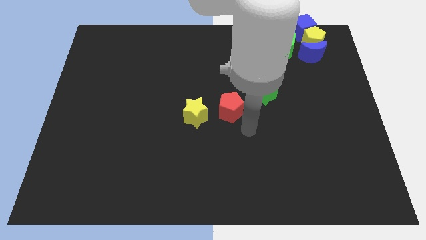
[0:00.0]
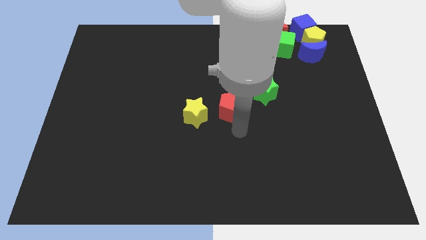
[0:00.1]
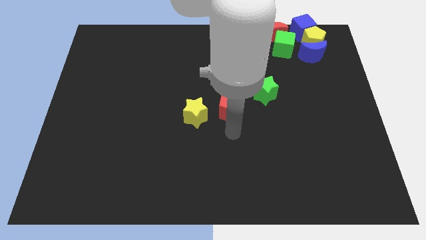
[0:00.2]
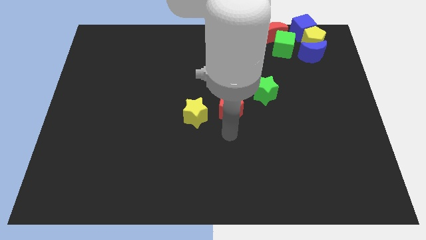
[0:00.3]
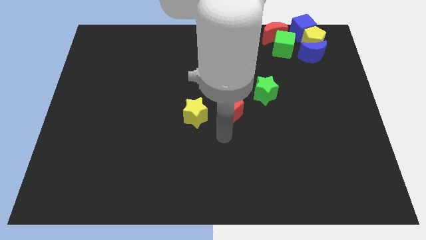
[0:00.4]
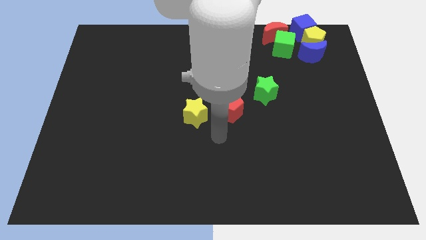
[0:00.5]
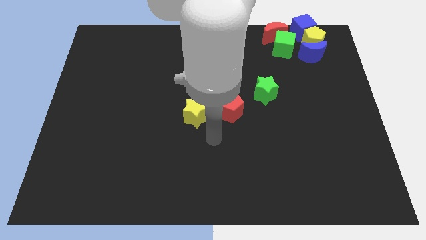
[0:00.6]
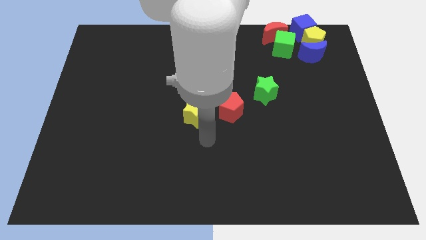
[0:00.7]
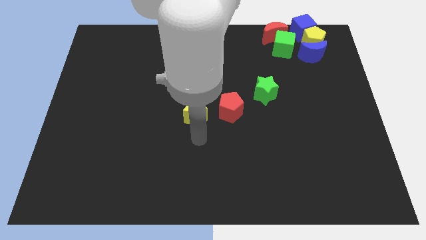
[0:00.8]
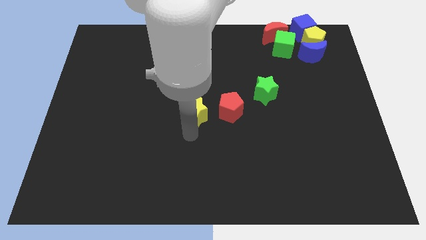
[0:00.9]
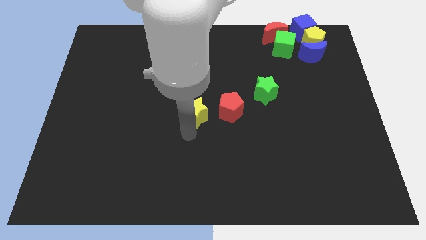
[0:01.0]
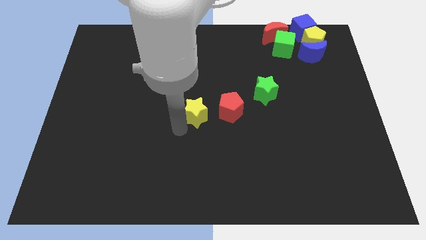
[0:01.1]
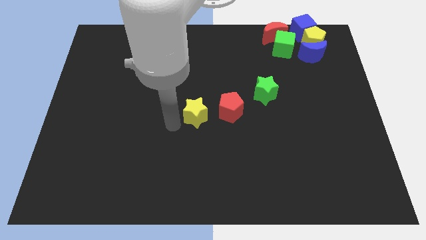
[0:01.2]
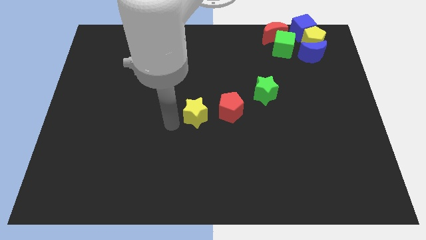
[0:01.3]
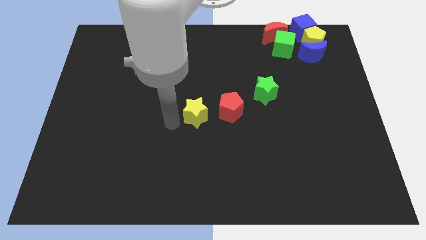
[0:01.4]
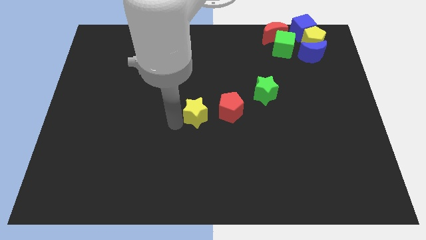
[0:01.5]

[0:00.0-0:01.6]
point your arm to the left side of yellow star

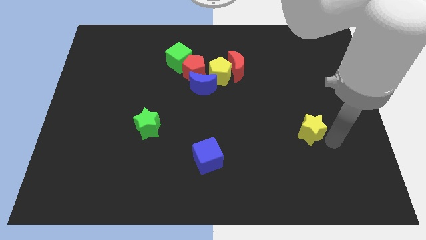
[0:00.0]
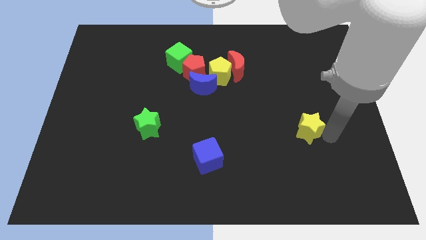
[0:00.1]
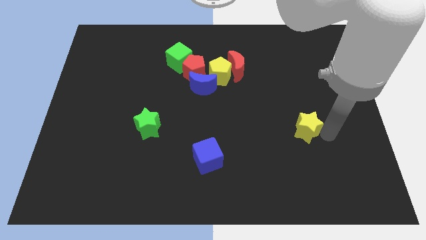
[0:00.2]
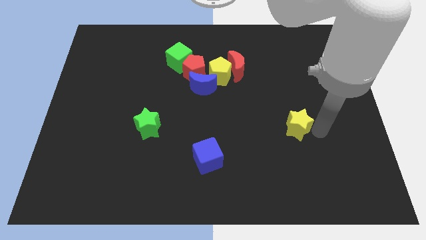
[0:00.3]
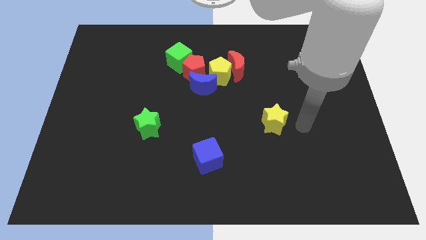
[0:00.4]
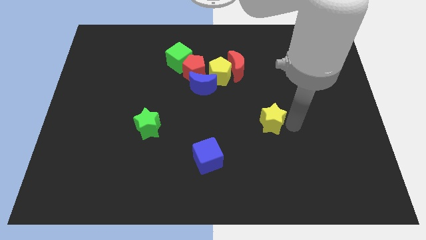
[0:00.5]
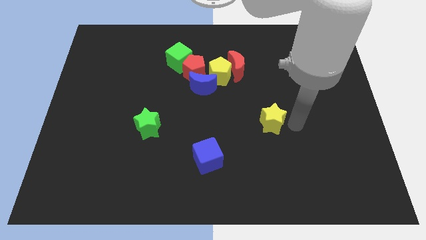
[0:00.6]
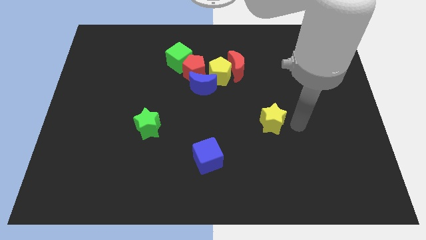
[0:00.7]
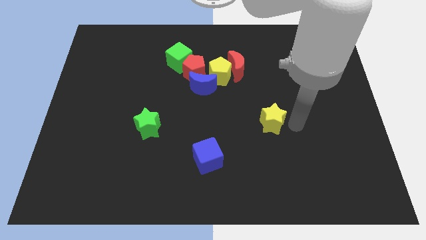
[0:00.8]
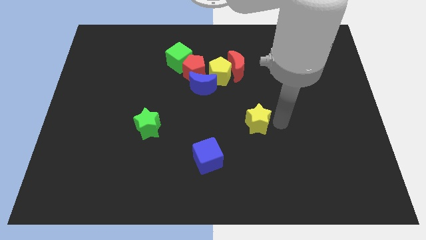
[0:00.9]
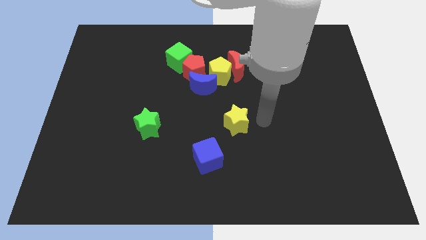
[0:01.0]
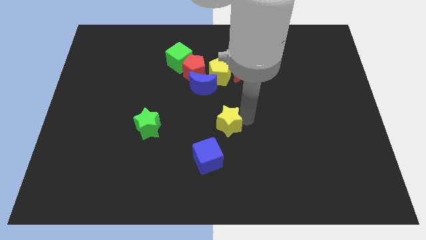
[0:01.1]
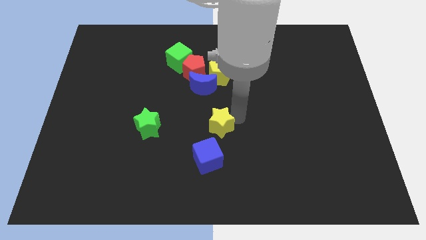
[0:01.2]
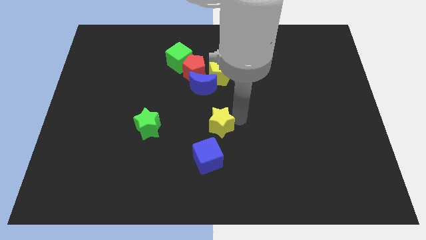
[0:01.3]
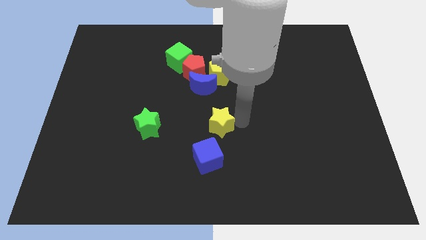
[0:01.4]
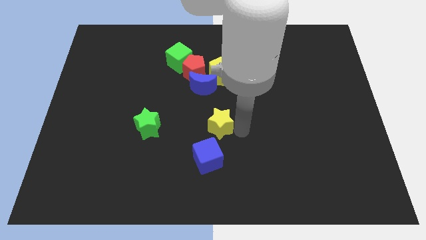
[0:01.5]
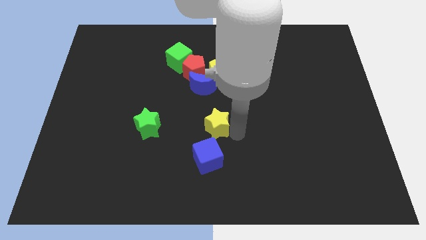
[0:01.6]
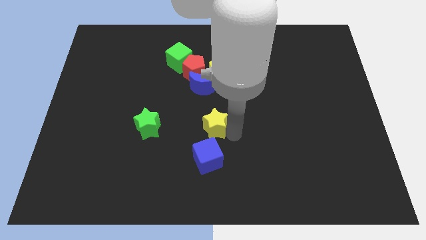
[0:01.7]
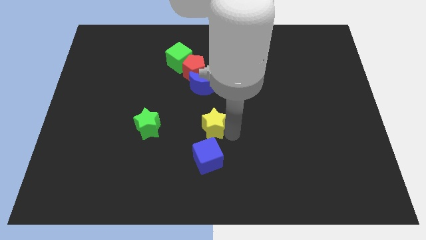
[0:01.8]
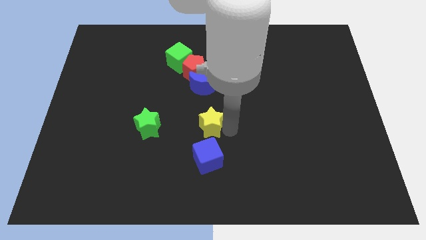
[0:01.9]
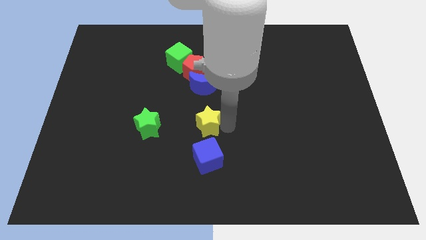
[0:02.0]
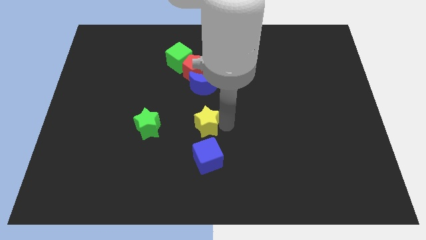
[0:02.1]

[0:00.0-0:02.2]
place the yellow star above to the blue cube

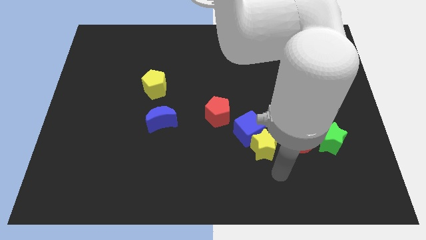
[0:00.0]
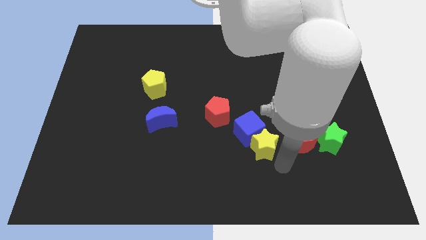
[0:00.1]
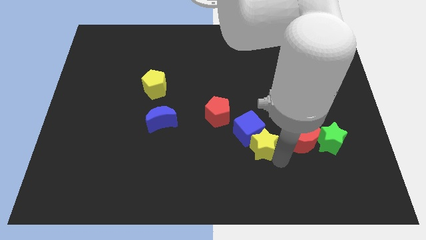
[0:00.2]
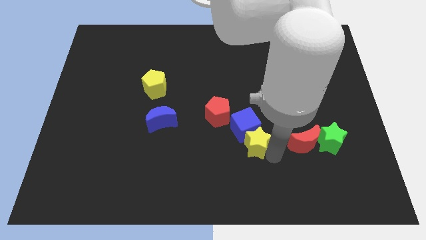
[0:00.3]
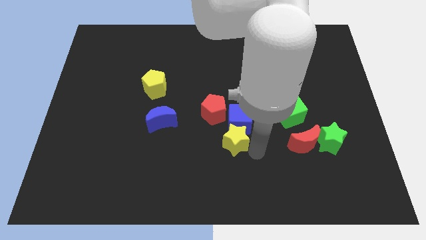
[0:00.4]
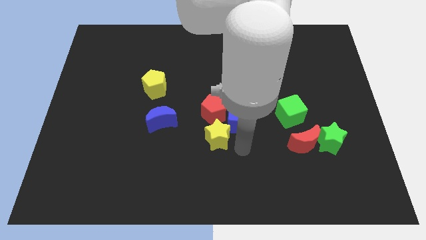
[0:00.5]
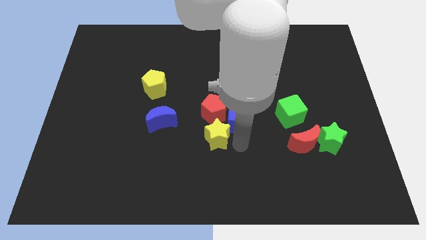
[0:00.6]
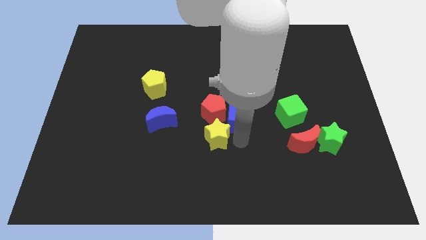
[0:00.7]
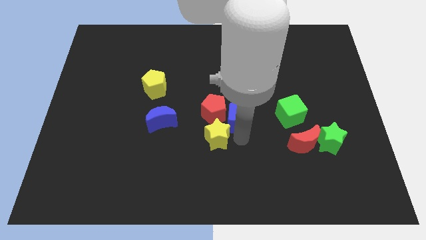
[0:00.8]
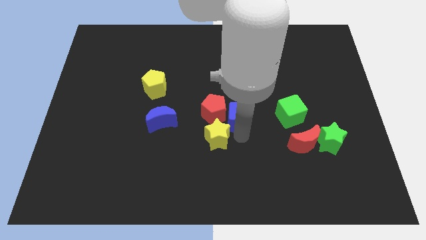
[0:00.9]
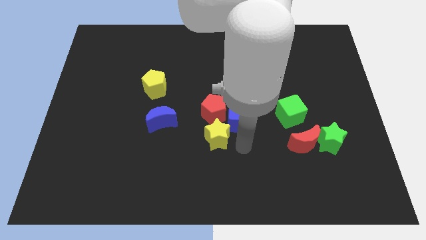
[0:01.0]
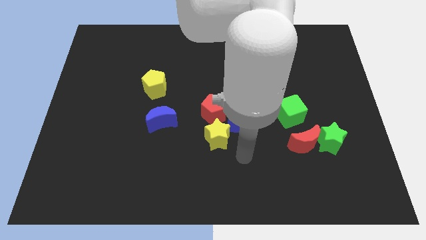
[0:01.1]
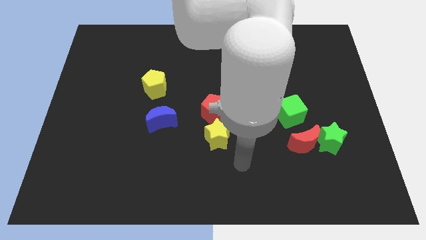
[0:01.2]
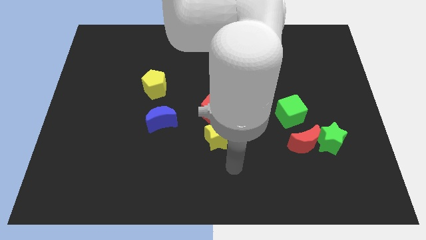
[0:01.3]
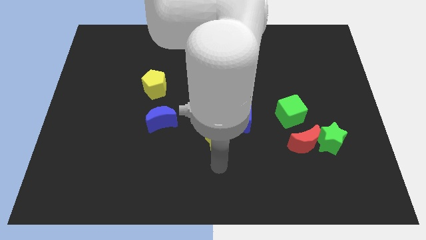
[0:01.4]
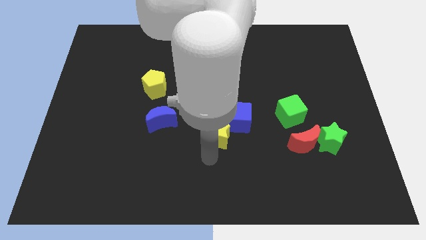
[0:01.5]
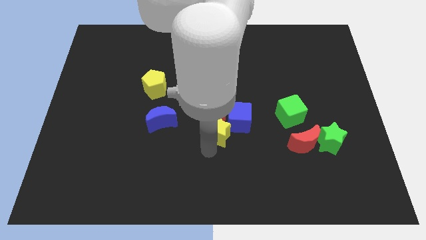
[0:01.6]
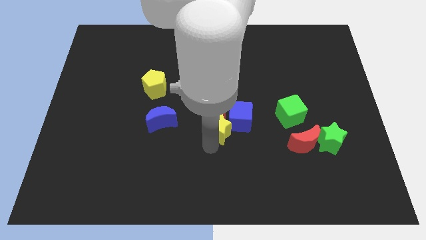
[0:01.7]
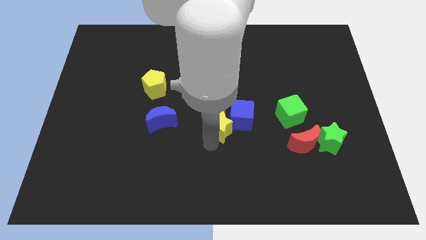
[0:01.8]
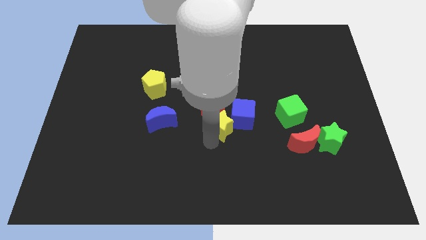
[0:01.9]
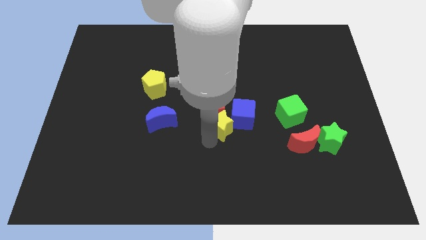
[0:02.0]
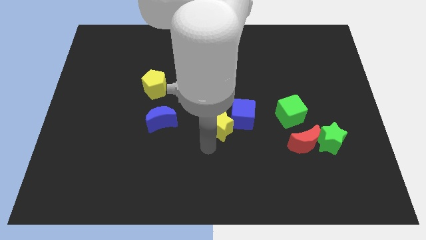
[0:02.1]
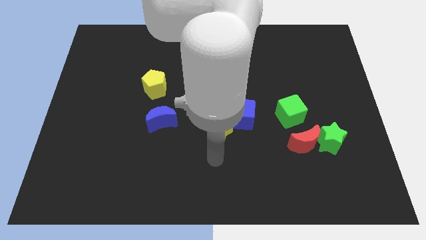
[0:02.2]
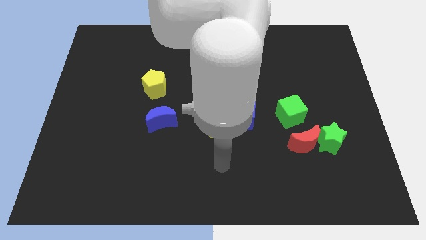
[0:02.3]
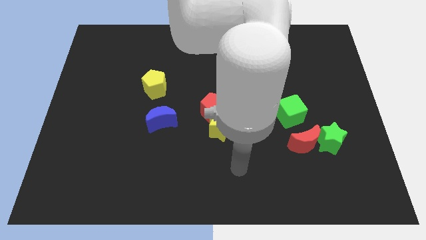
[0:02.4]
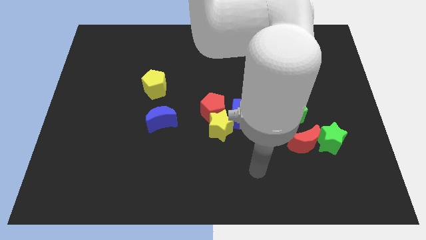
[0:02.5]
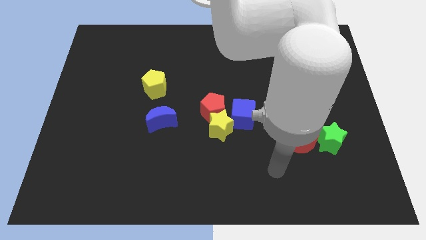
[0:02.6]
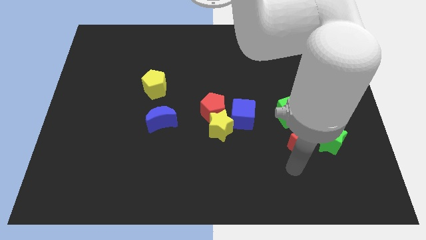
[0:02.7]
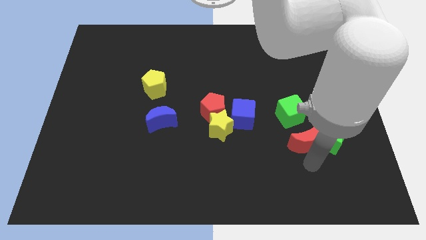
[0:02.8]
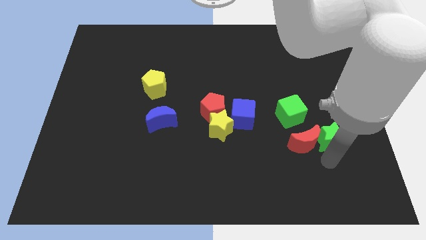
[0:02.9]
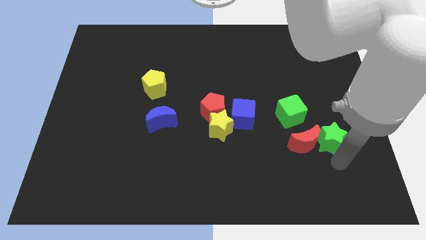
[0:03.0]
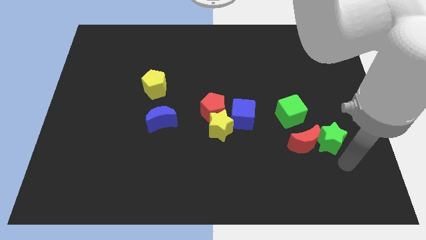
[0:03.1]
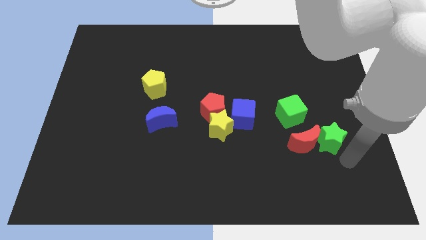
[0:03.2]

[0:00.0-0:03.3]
make a triangle out of red pentagon yellow star and the blue cube

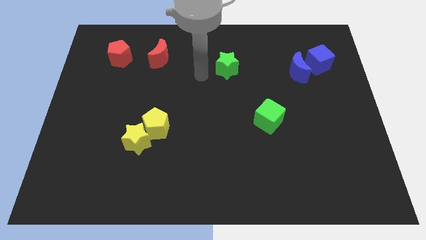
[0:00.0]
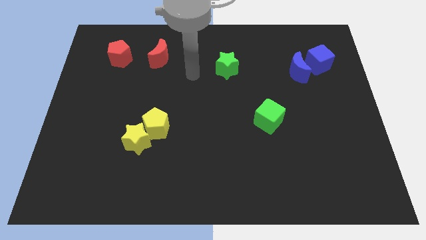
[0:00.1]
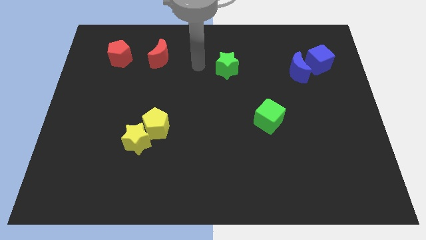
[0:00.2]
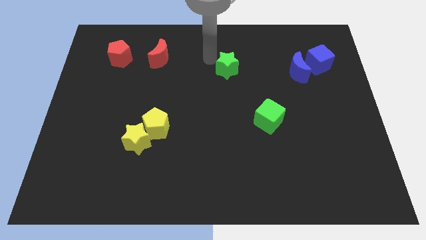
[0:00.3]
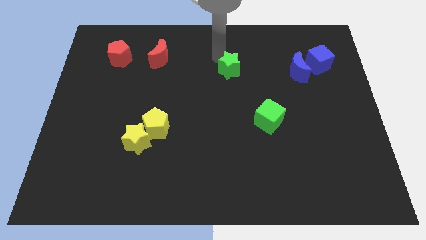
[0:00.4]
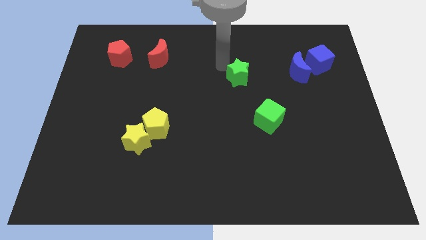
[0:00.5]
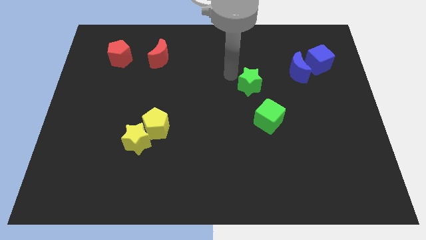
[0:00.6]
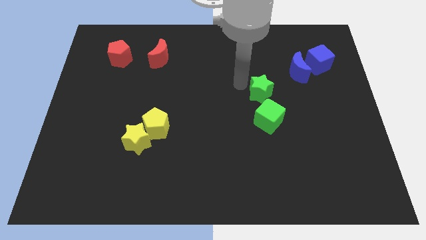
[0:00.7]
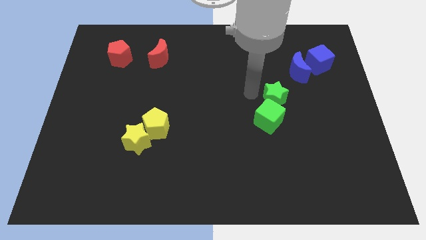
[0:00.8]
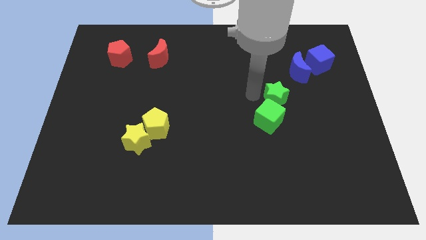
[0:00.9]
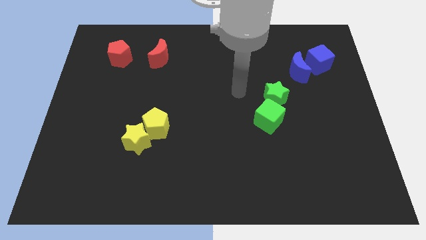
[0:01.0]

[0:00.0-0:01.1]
push the green star to the top side of the green cube

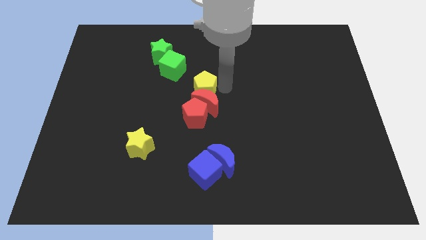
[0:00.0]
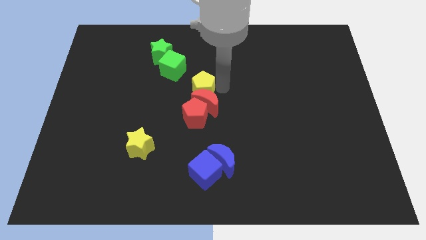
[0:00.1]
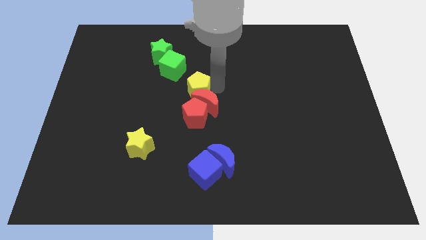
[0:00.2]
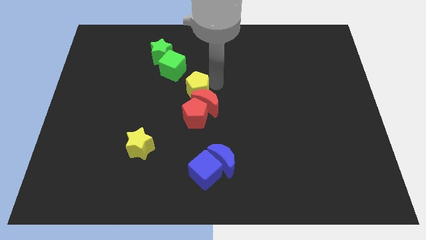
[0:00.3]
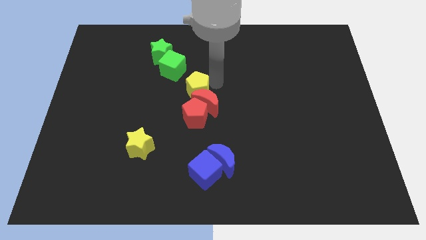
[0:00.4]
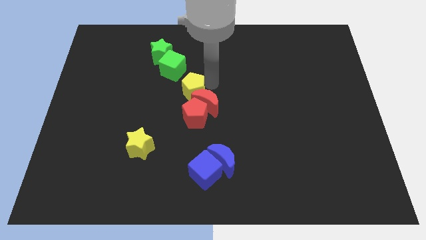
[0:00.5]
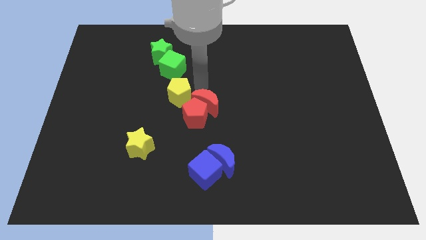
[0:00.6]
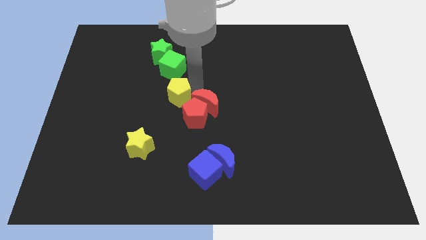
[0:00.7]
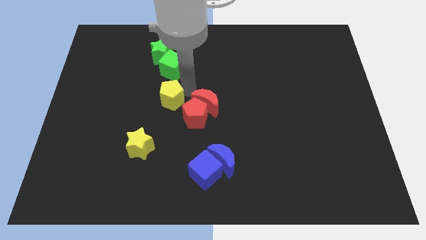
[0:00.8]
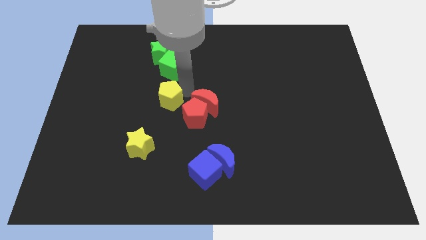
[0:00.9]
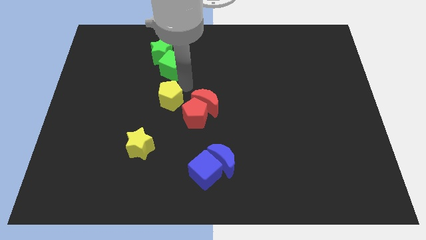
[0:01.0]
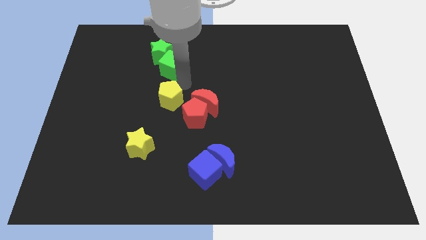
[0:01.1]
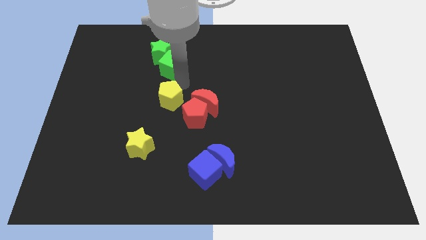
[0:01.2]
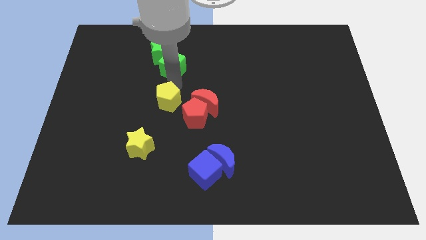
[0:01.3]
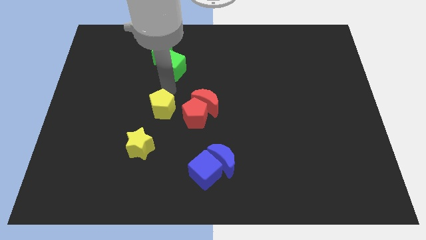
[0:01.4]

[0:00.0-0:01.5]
move the yellow pentagon vertically to the green star at the bottom
